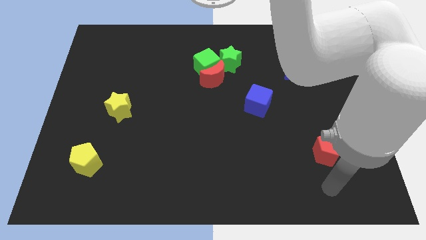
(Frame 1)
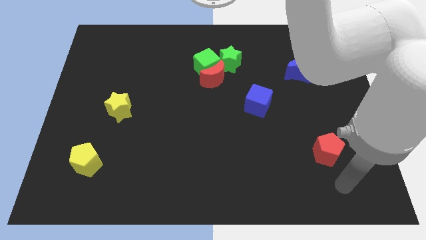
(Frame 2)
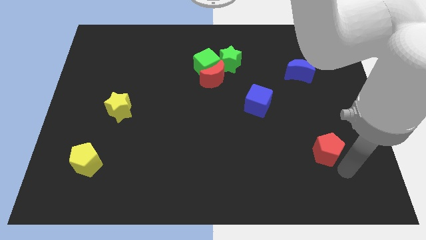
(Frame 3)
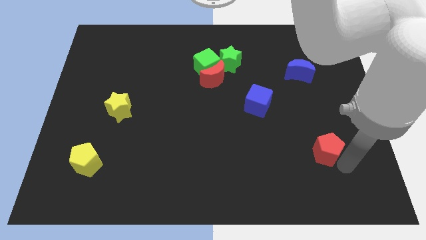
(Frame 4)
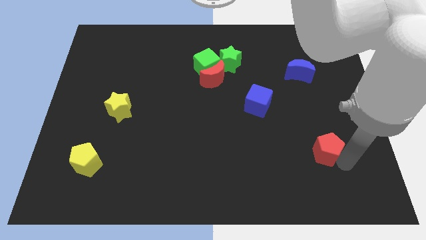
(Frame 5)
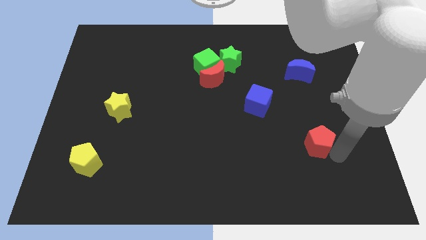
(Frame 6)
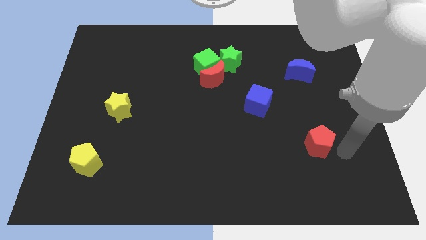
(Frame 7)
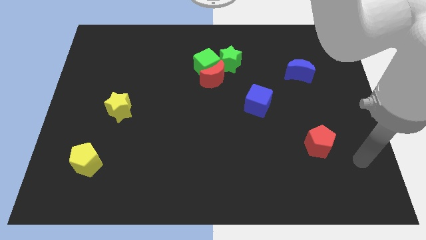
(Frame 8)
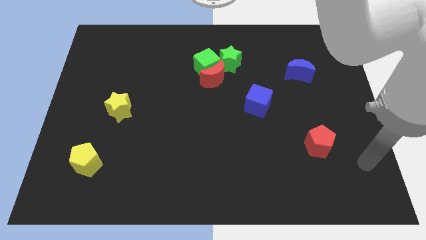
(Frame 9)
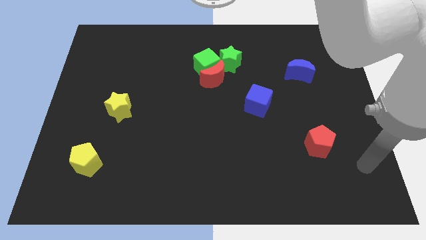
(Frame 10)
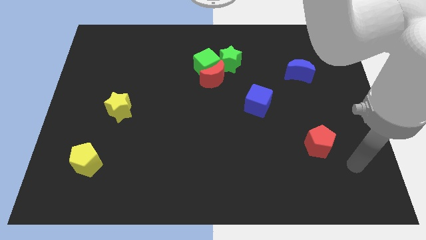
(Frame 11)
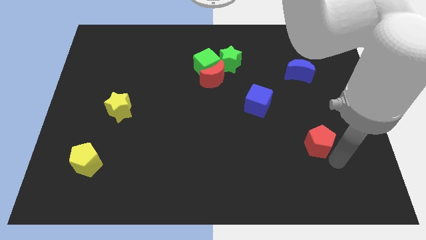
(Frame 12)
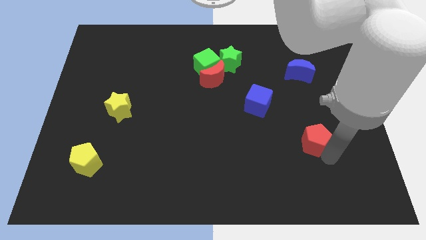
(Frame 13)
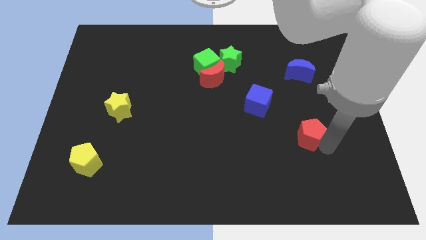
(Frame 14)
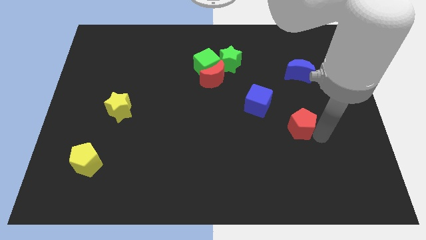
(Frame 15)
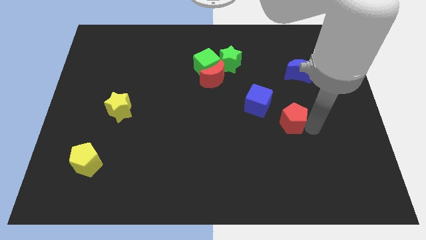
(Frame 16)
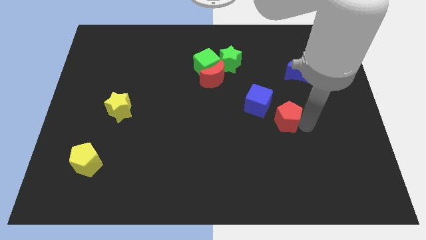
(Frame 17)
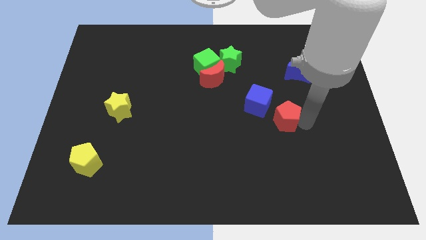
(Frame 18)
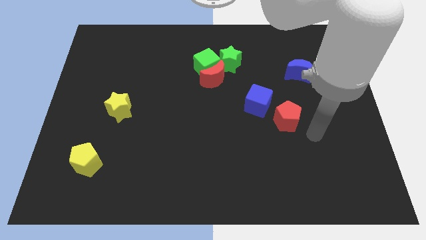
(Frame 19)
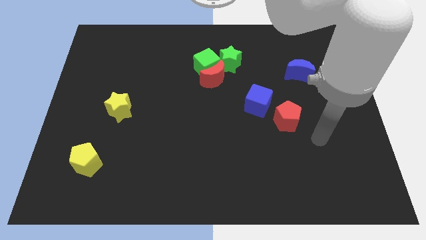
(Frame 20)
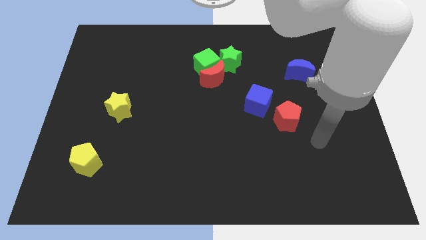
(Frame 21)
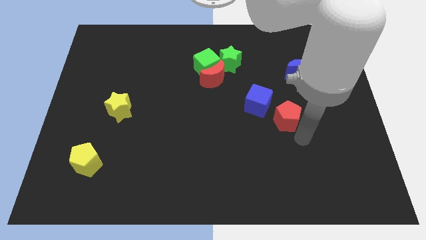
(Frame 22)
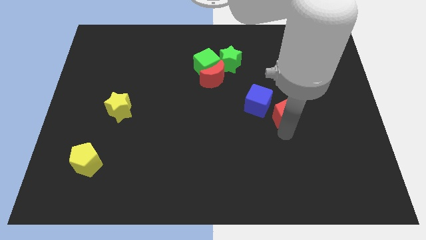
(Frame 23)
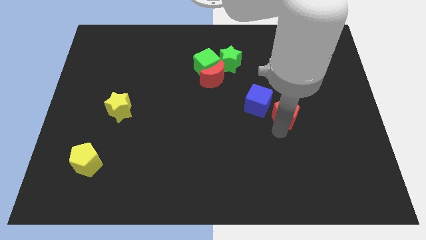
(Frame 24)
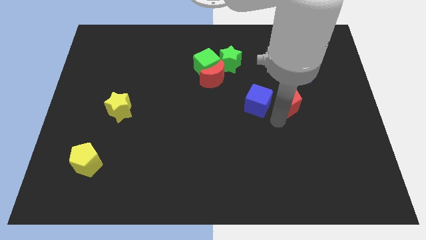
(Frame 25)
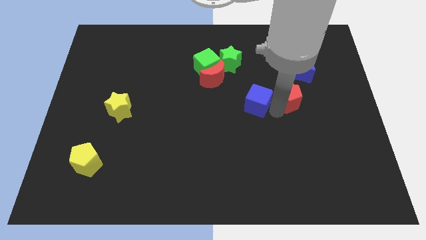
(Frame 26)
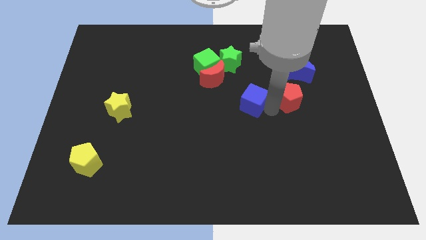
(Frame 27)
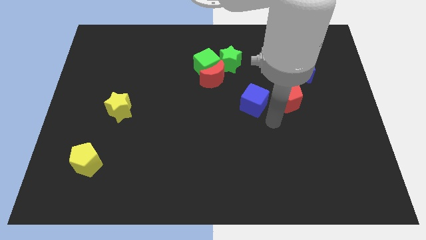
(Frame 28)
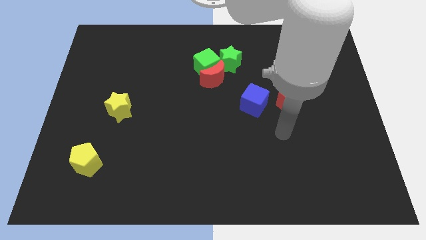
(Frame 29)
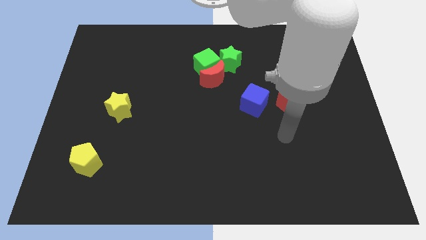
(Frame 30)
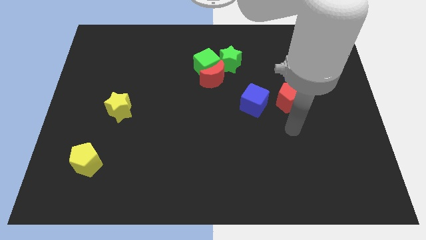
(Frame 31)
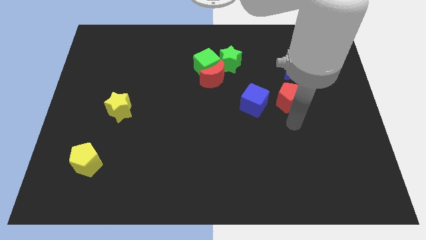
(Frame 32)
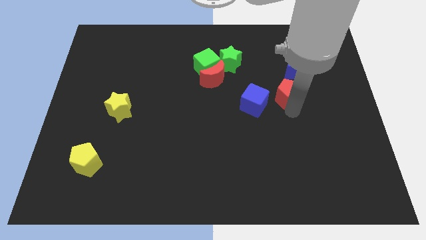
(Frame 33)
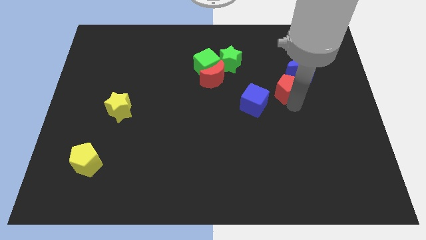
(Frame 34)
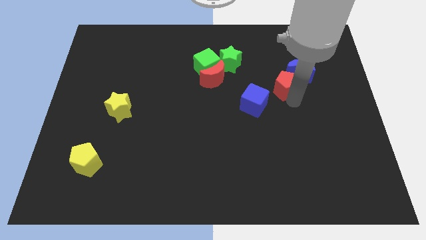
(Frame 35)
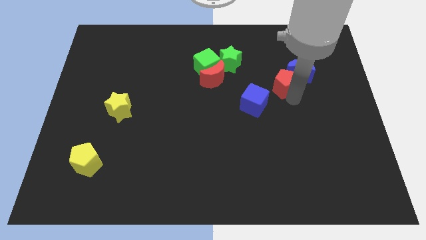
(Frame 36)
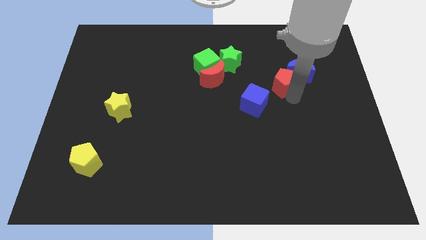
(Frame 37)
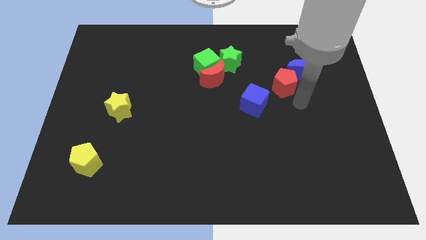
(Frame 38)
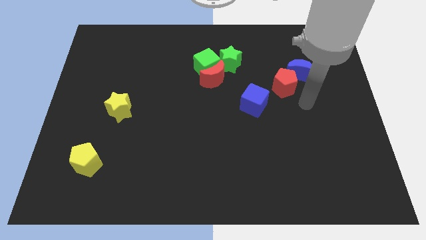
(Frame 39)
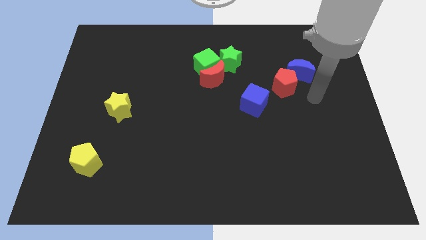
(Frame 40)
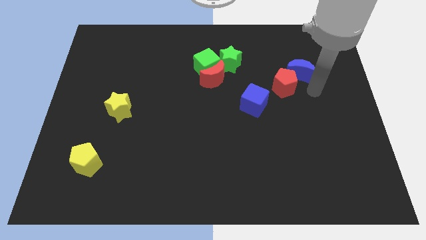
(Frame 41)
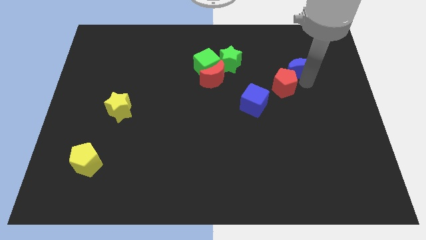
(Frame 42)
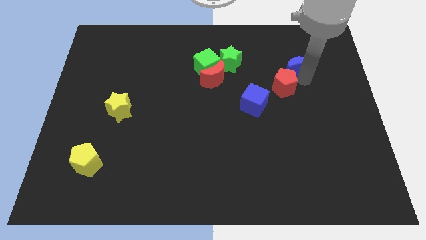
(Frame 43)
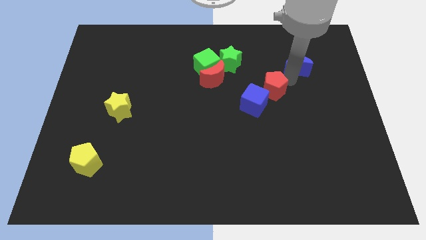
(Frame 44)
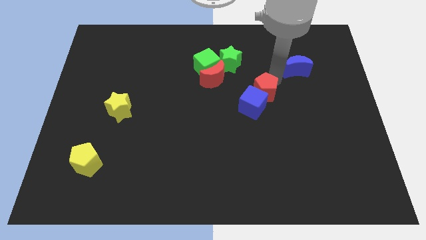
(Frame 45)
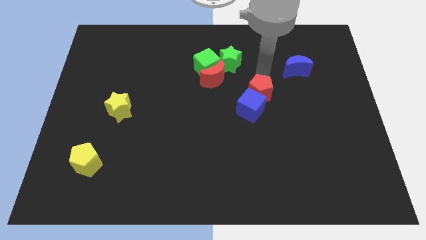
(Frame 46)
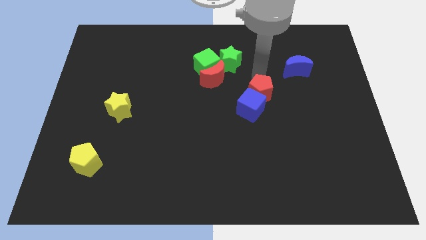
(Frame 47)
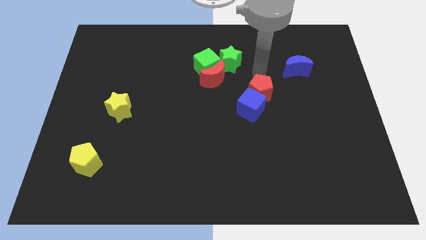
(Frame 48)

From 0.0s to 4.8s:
move the red pentagon in between two blocks

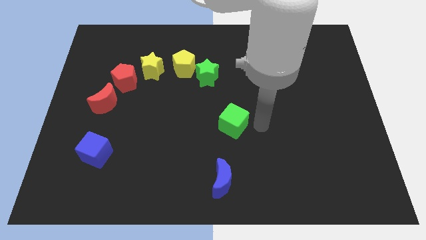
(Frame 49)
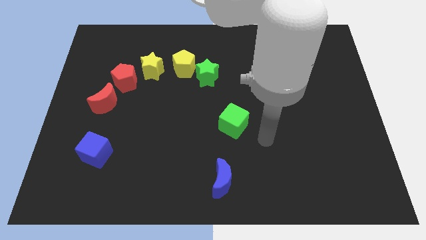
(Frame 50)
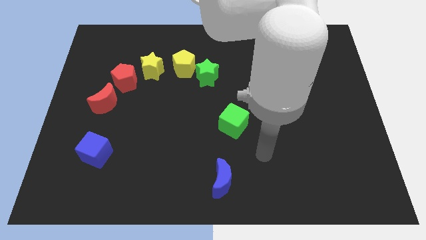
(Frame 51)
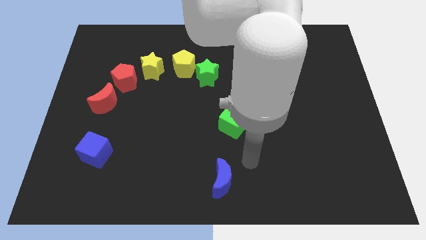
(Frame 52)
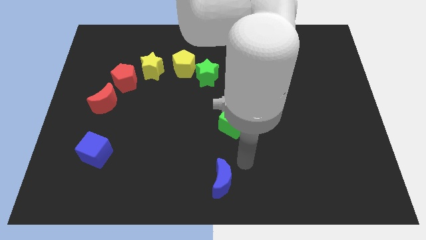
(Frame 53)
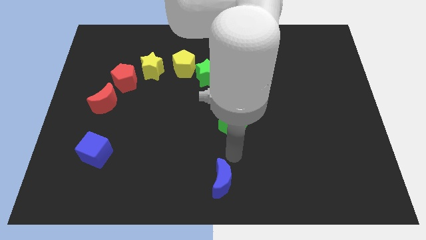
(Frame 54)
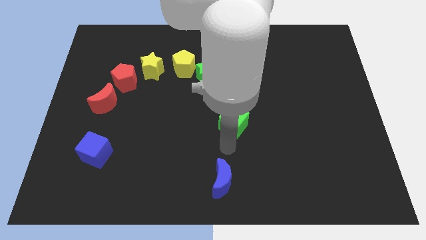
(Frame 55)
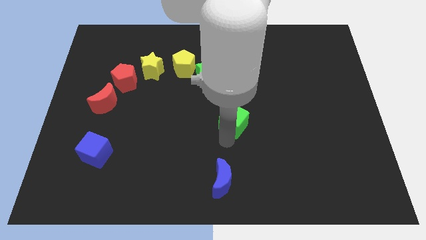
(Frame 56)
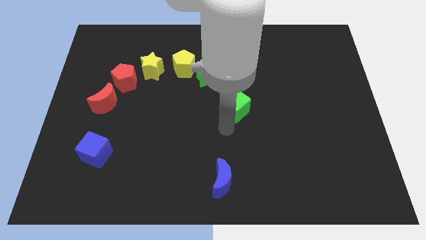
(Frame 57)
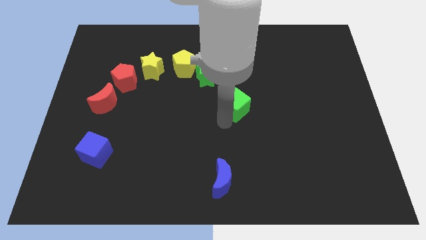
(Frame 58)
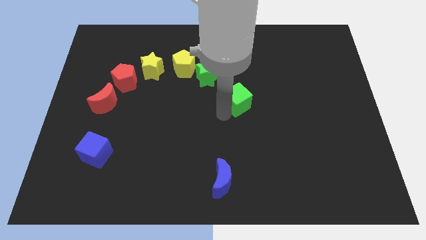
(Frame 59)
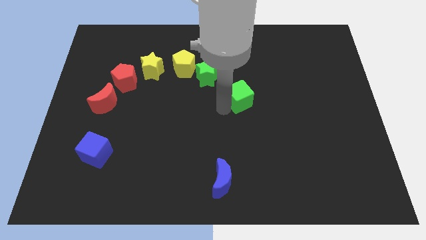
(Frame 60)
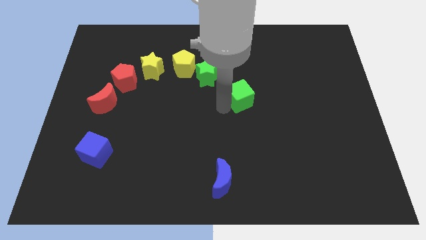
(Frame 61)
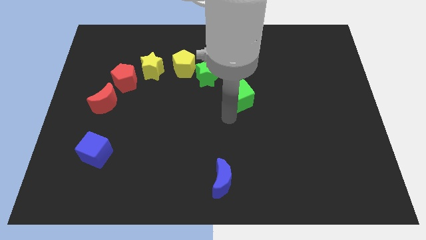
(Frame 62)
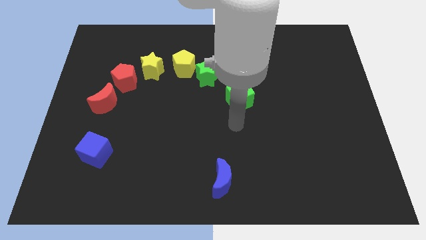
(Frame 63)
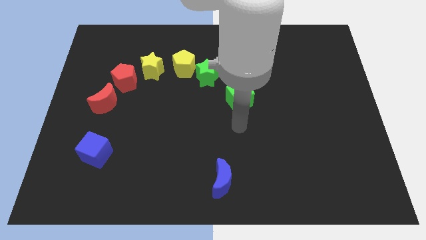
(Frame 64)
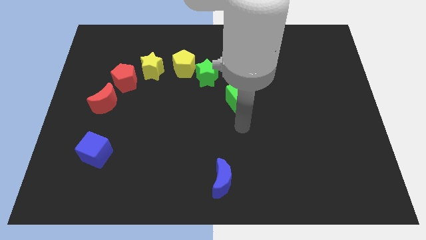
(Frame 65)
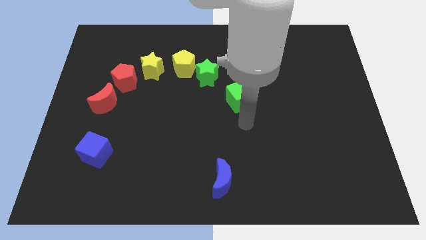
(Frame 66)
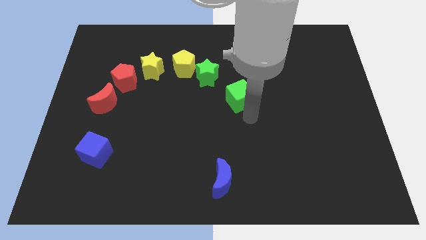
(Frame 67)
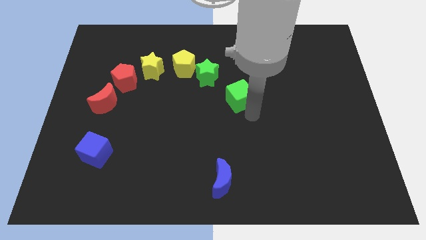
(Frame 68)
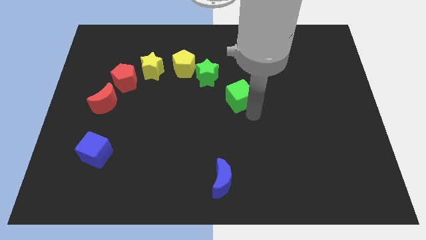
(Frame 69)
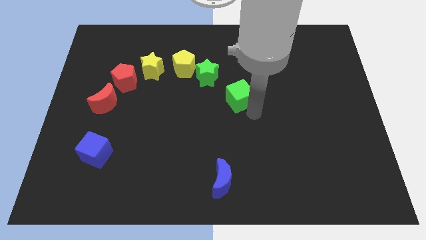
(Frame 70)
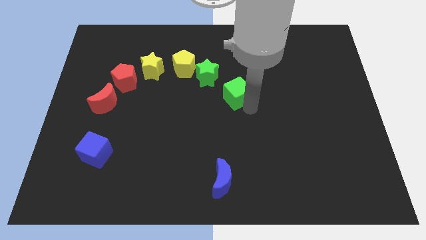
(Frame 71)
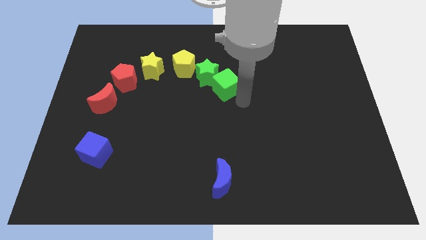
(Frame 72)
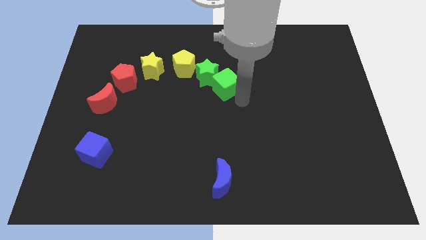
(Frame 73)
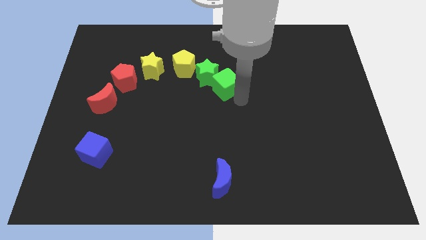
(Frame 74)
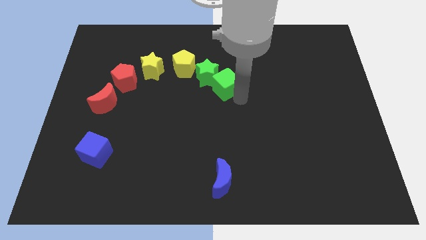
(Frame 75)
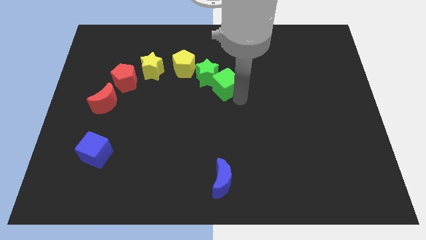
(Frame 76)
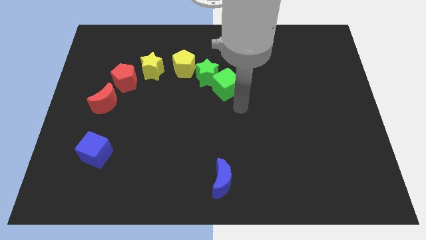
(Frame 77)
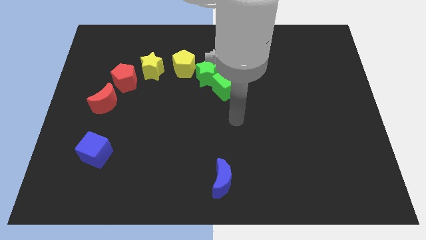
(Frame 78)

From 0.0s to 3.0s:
place the green cube below the green star

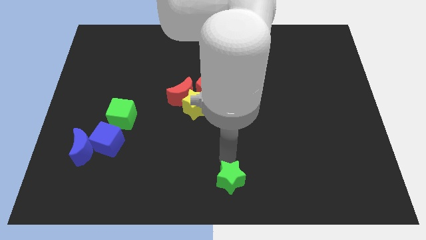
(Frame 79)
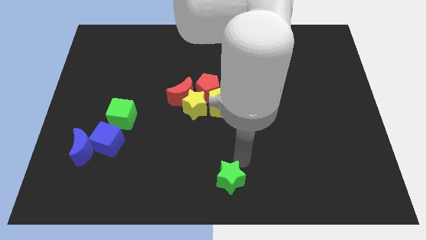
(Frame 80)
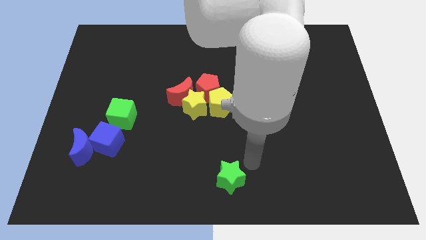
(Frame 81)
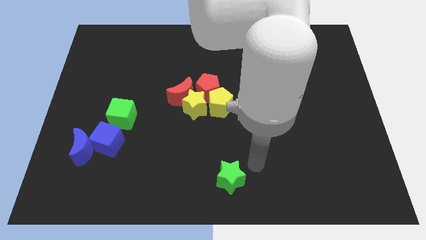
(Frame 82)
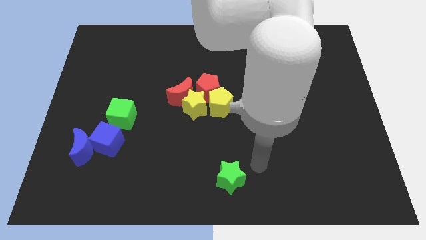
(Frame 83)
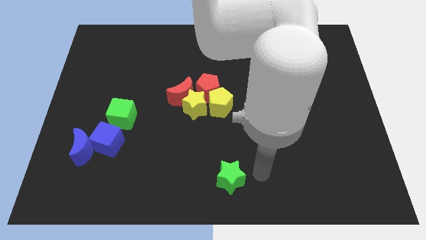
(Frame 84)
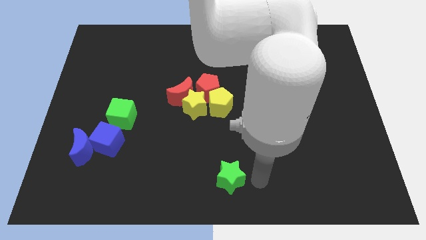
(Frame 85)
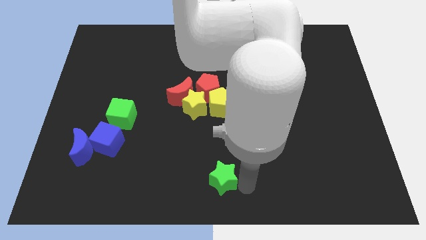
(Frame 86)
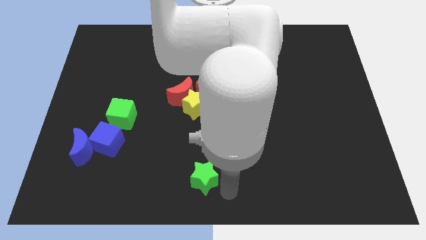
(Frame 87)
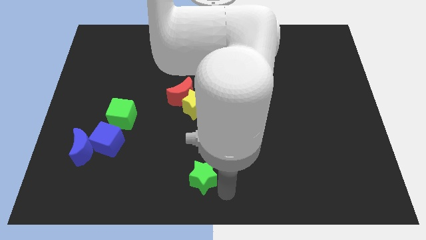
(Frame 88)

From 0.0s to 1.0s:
move green star below yellow star

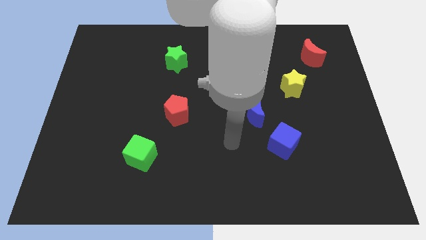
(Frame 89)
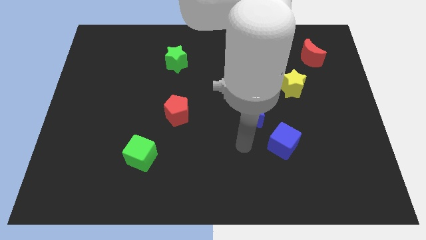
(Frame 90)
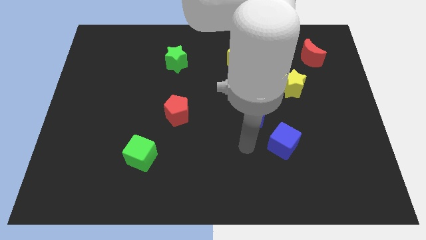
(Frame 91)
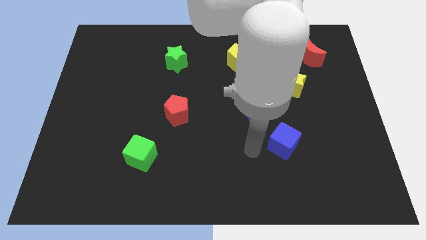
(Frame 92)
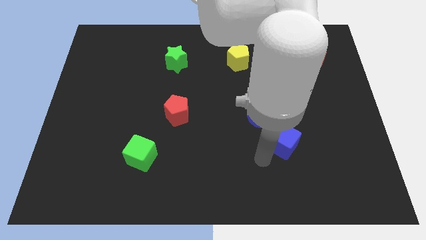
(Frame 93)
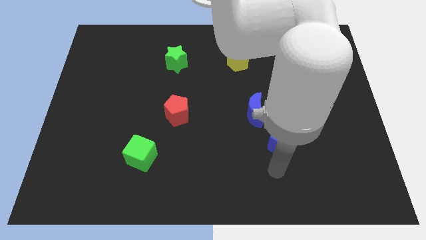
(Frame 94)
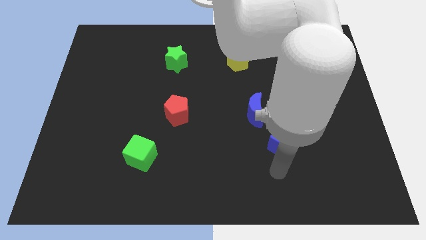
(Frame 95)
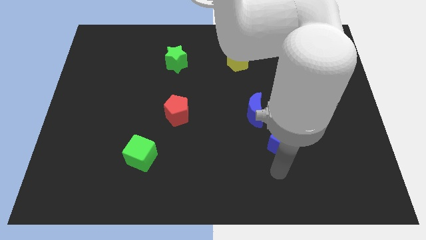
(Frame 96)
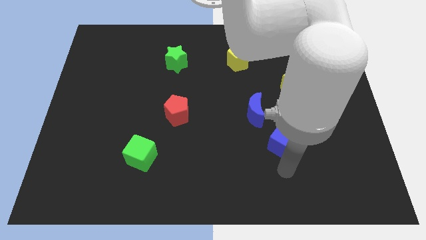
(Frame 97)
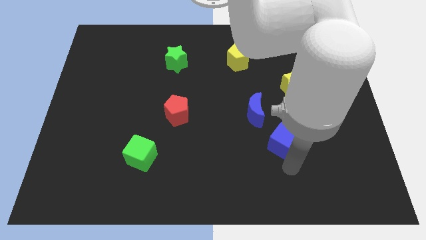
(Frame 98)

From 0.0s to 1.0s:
point your arm at the bottom of the blue cube
